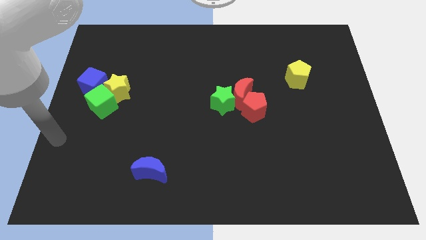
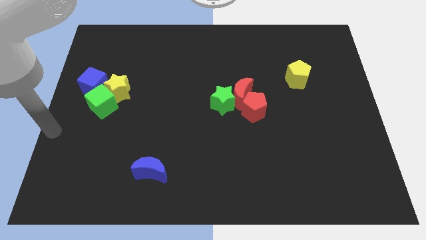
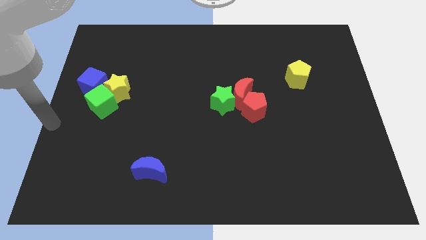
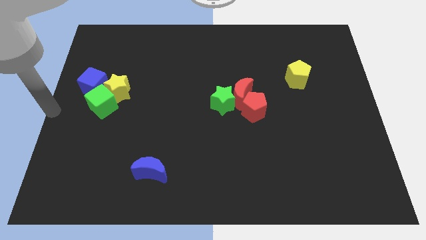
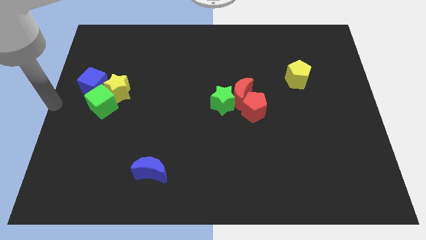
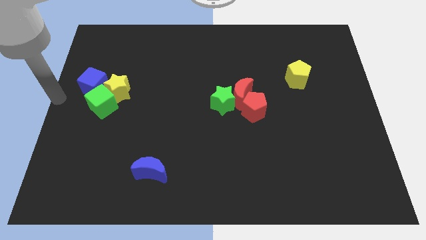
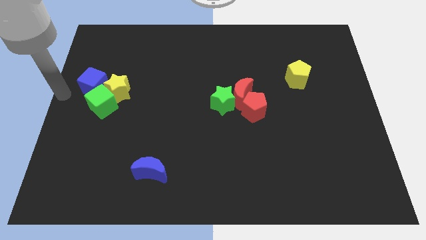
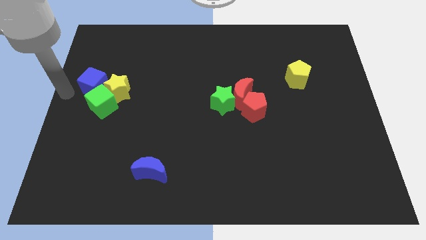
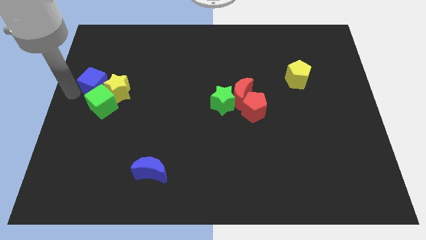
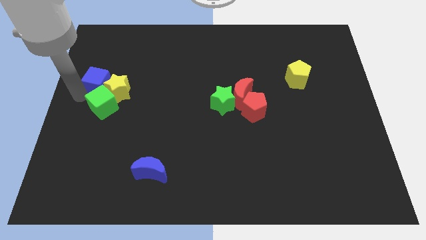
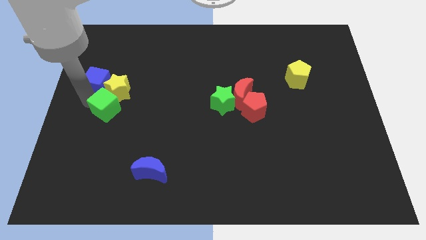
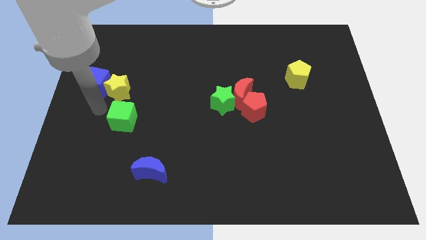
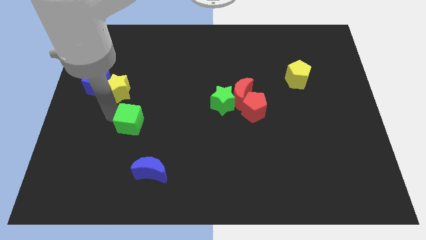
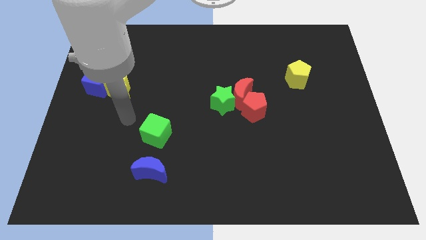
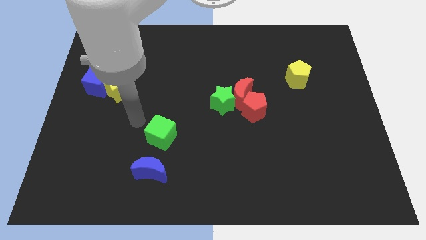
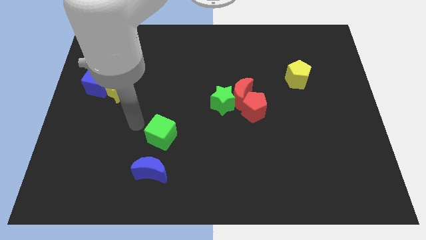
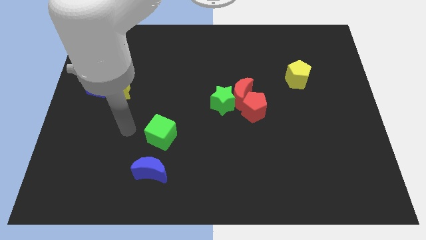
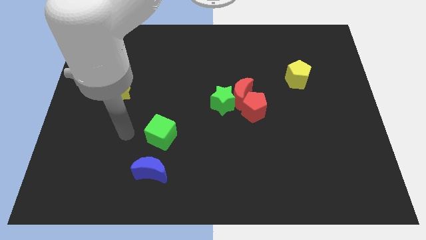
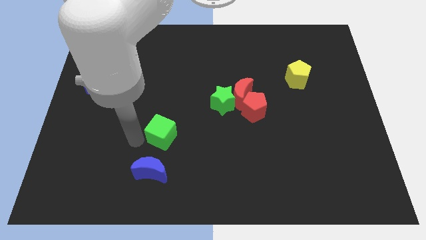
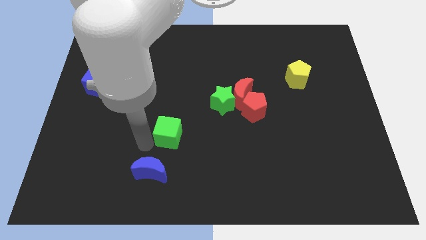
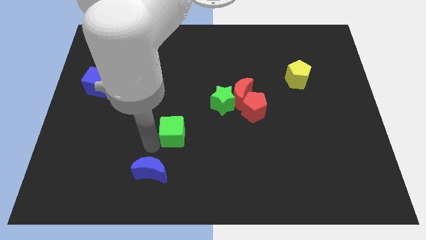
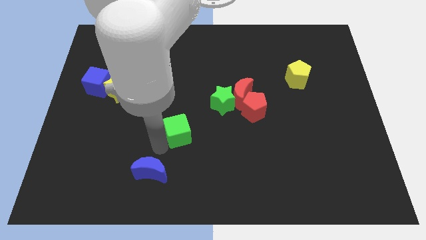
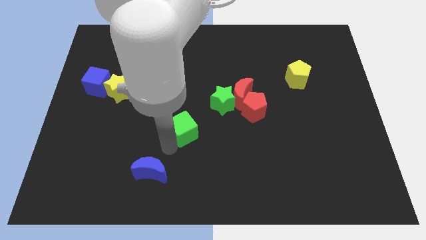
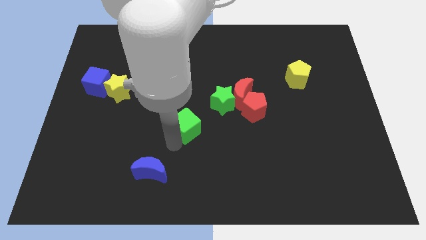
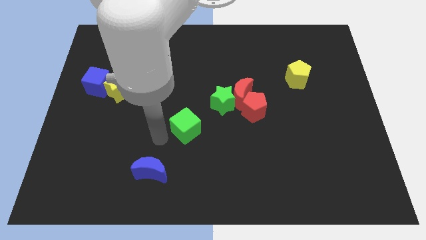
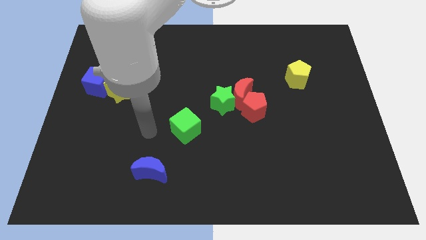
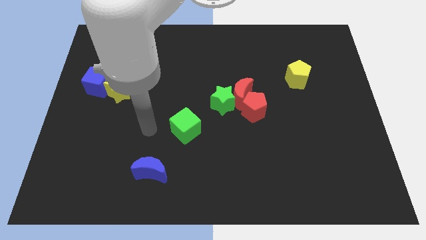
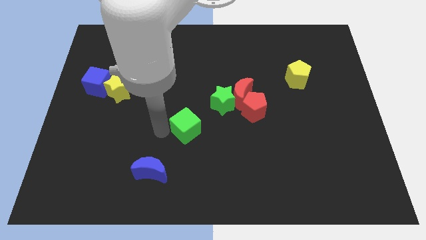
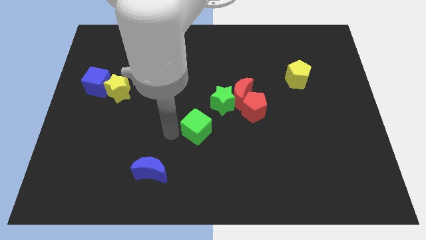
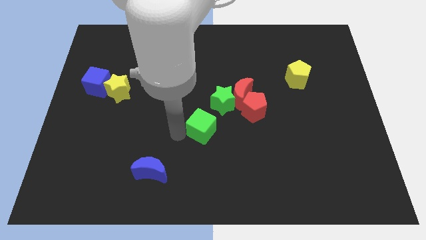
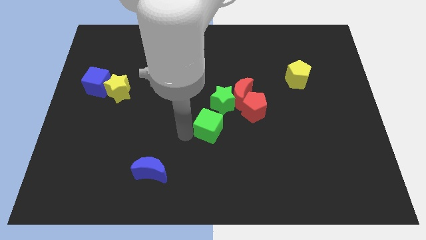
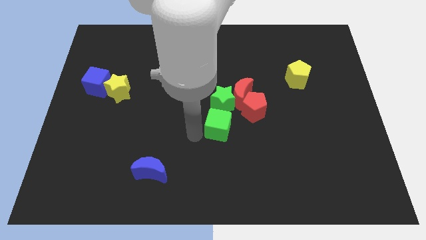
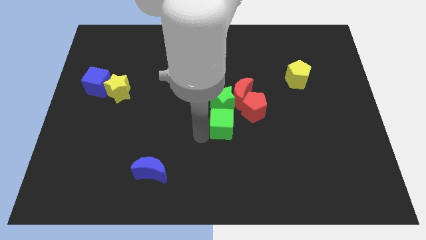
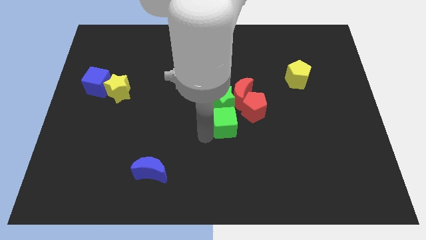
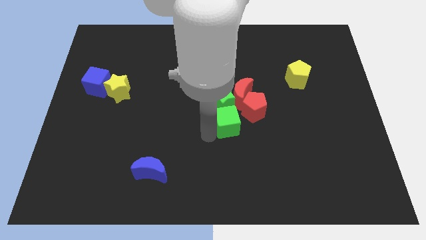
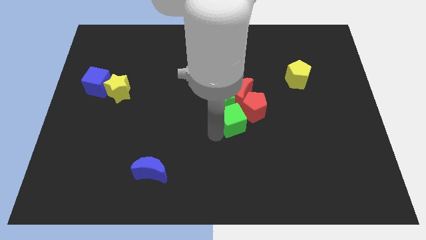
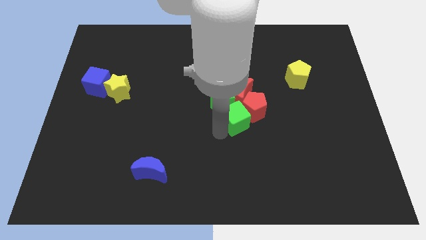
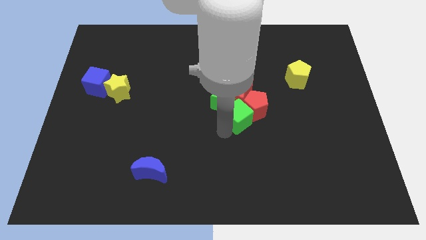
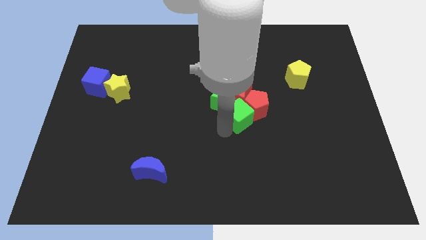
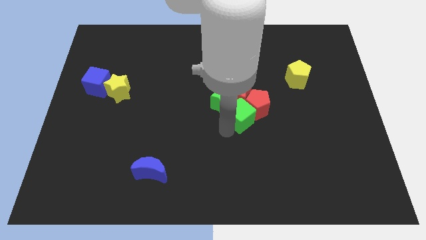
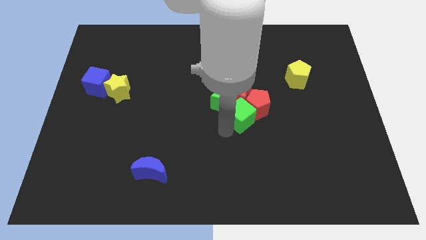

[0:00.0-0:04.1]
push green cube into the group of blocks

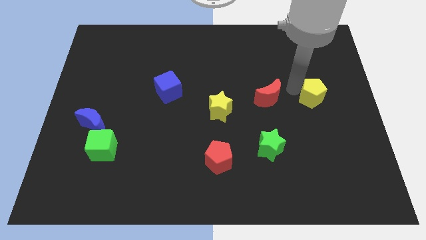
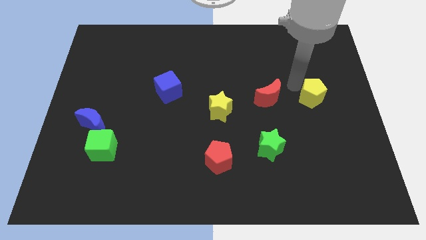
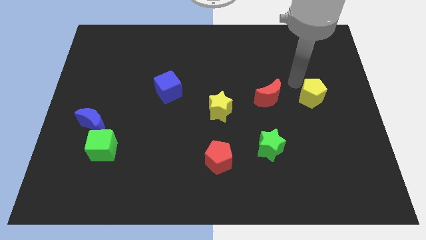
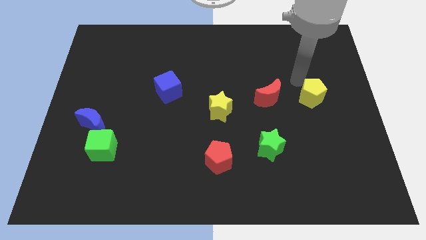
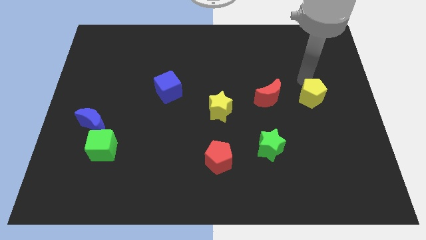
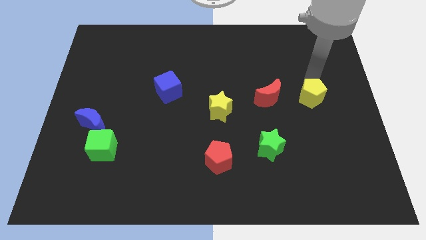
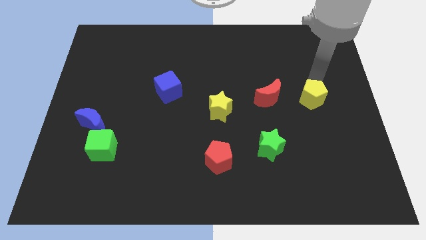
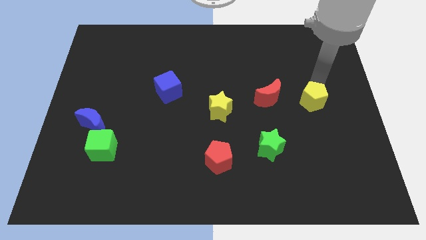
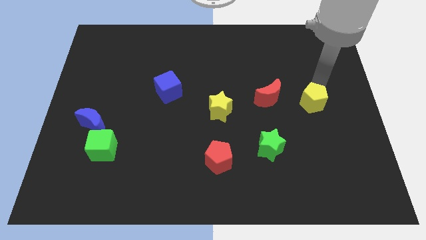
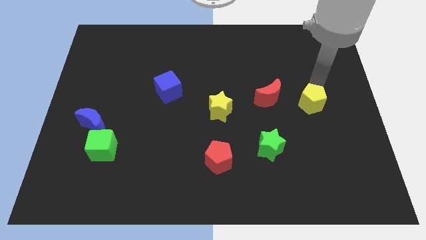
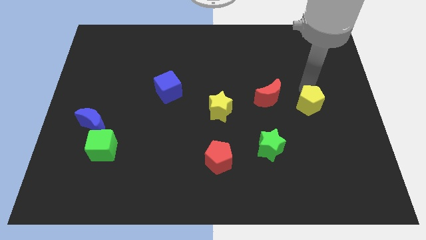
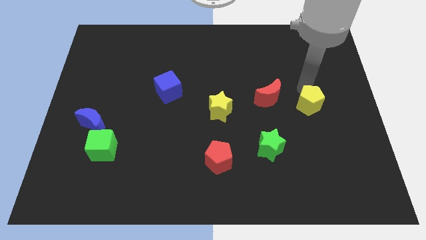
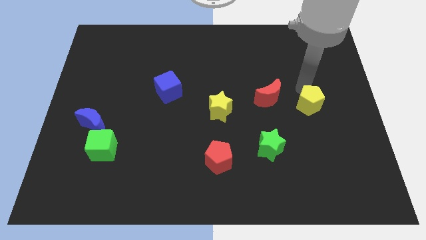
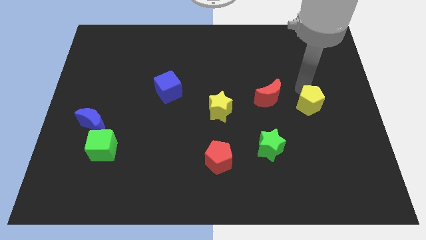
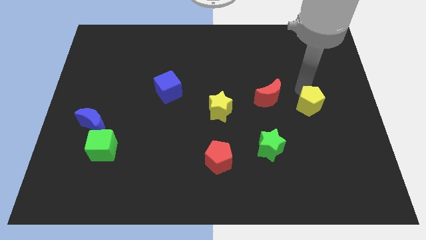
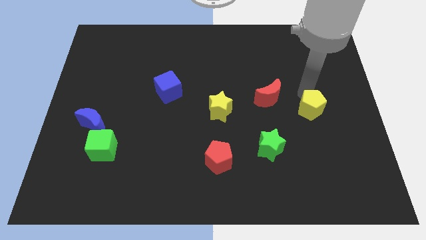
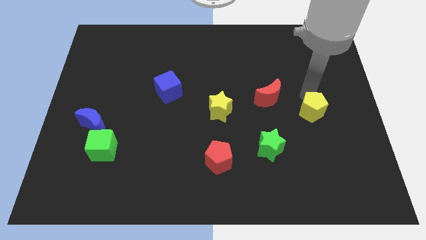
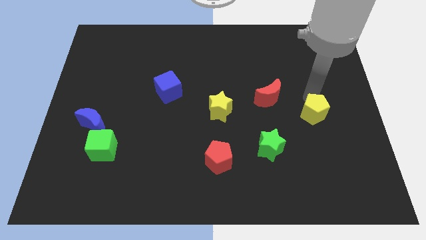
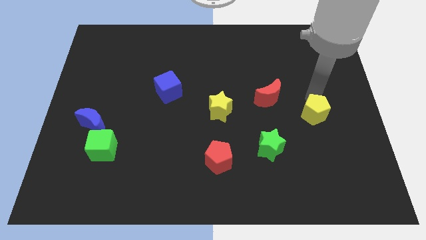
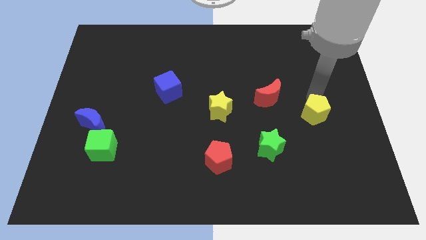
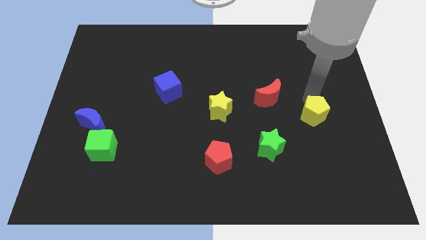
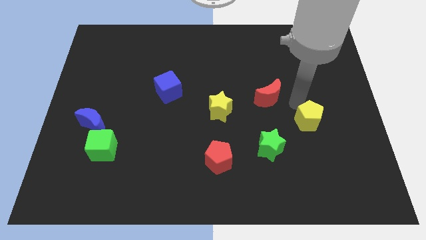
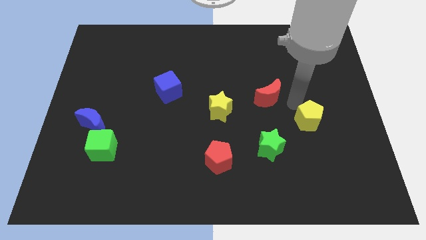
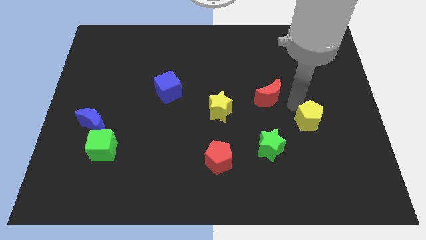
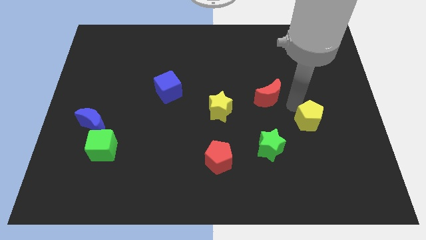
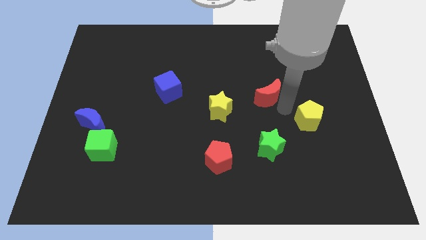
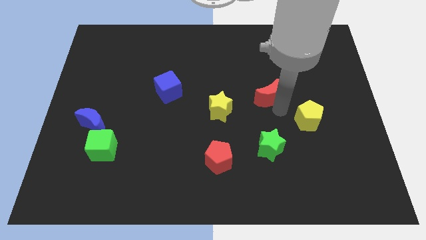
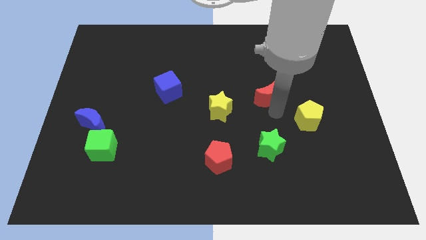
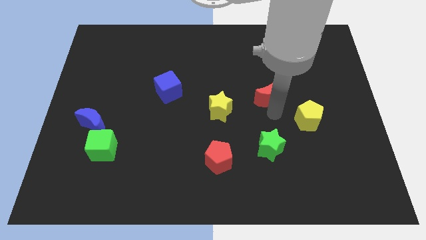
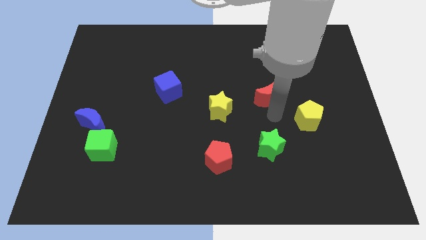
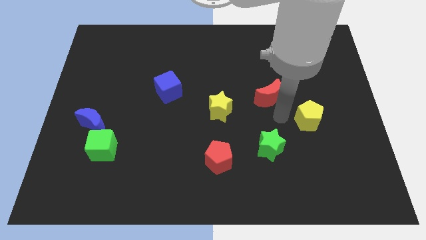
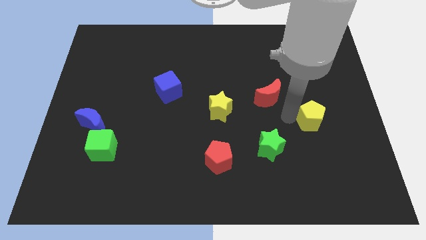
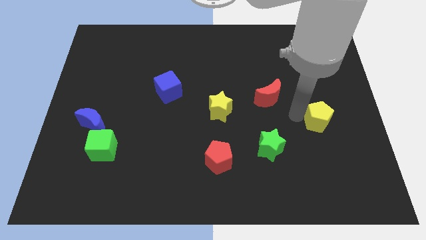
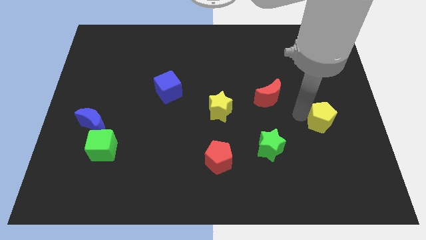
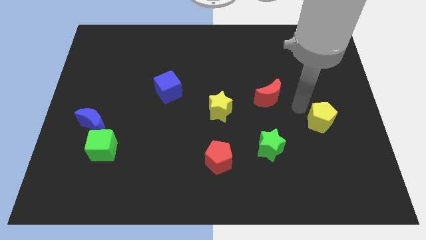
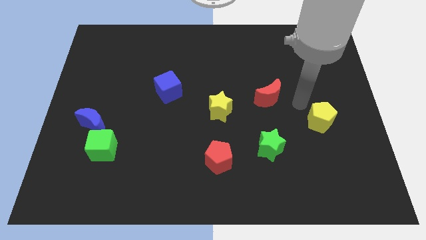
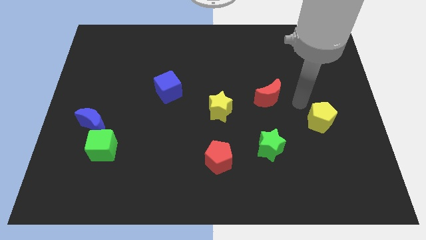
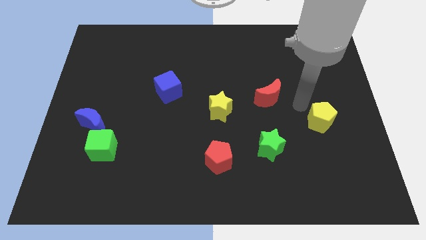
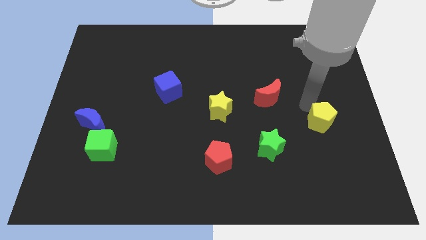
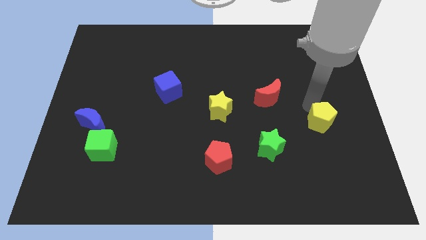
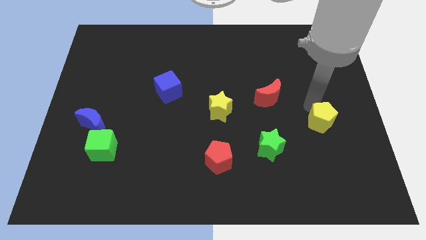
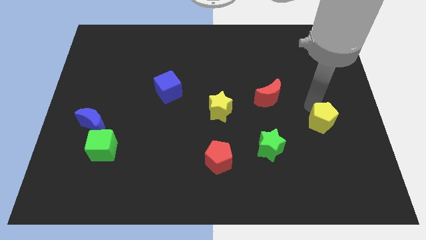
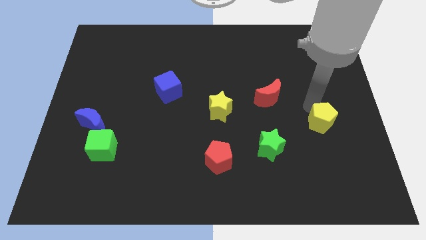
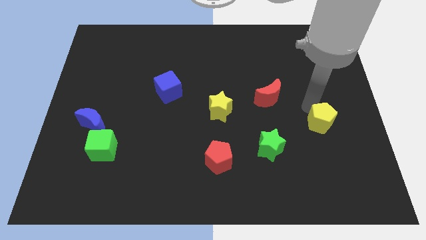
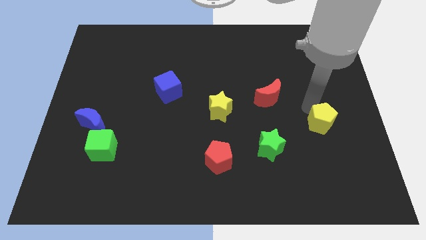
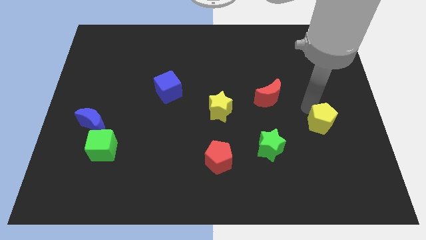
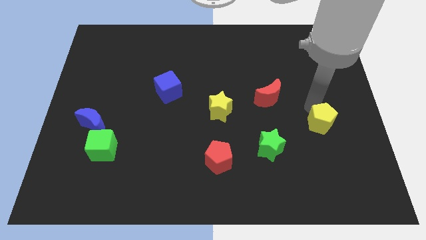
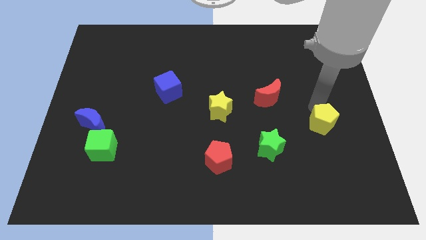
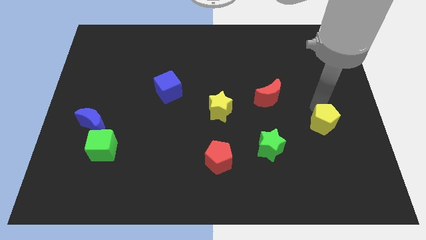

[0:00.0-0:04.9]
push the yellow pentagon slightly towards the center right of the board
